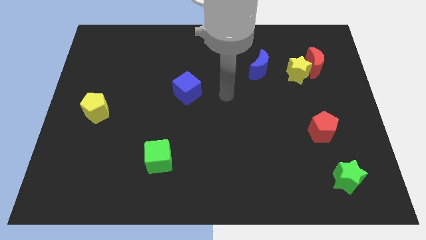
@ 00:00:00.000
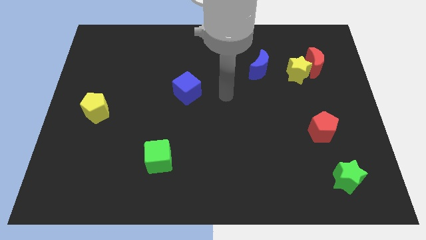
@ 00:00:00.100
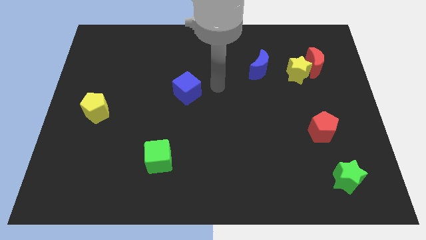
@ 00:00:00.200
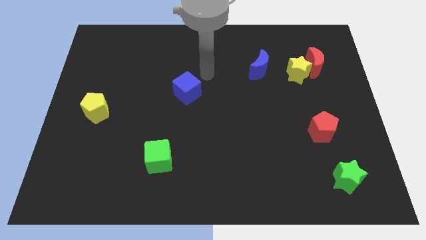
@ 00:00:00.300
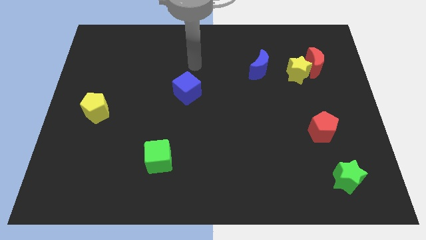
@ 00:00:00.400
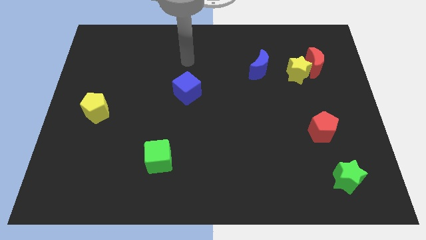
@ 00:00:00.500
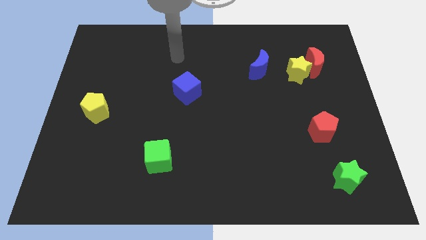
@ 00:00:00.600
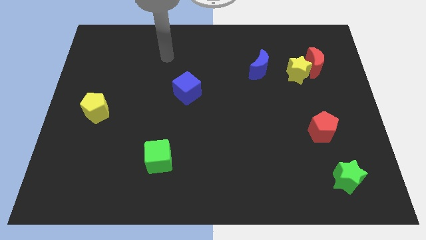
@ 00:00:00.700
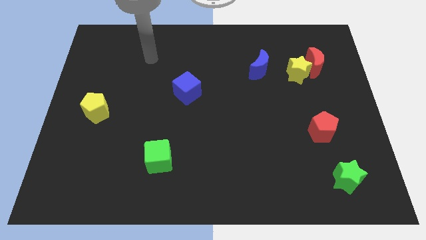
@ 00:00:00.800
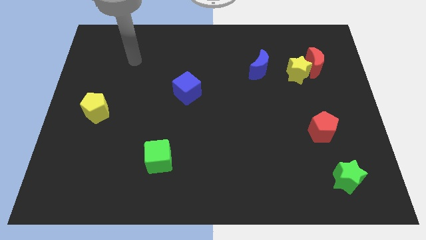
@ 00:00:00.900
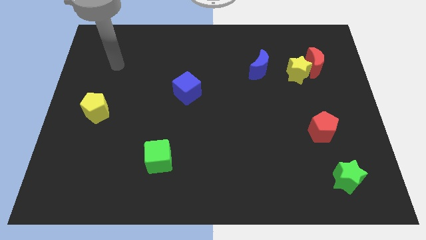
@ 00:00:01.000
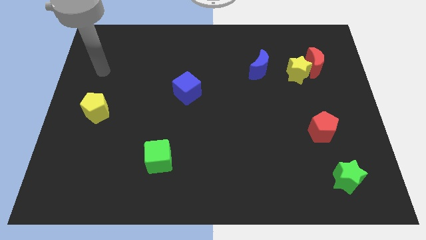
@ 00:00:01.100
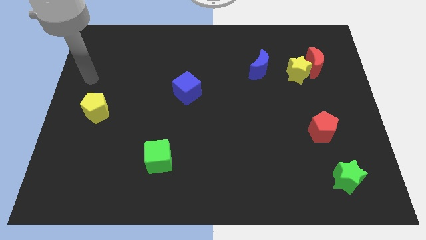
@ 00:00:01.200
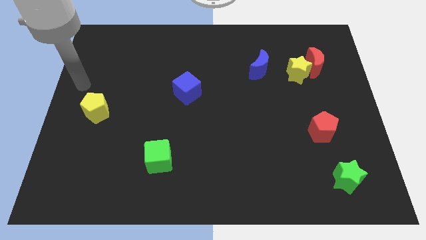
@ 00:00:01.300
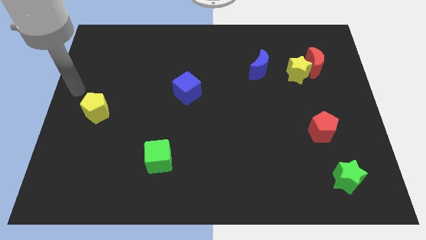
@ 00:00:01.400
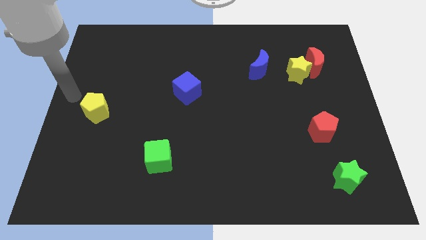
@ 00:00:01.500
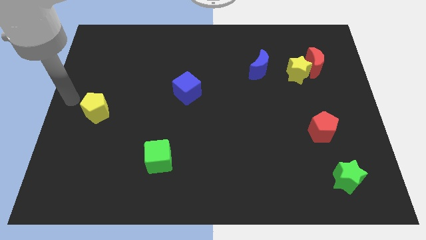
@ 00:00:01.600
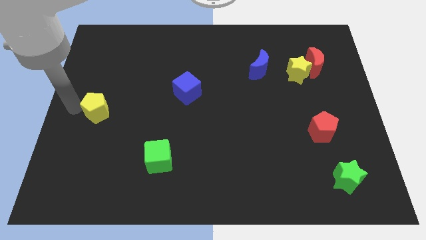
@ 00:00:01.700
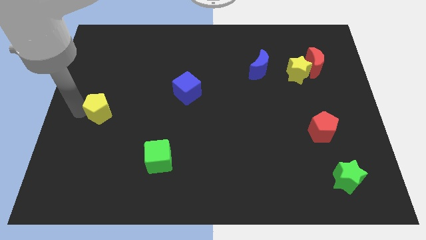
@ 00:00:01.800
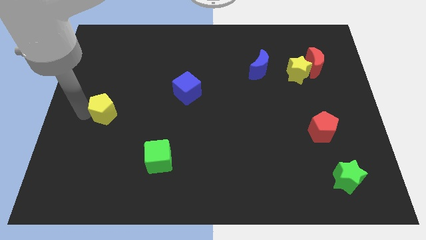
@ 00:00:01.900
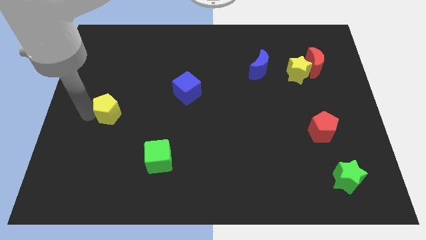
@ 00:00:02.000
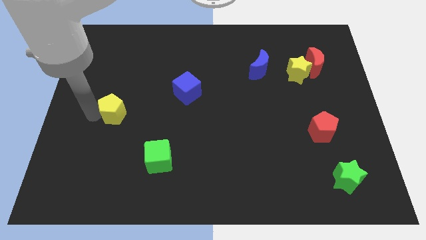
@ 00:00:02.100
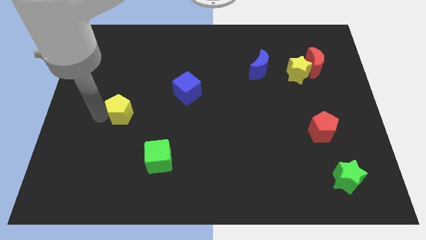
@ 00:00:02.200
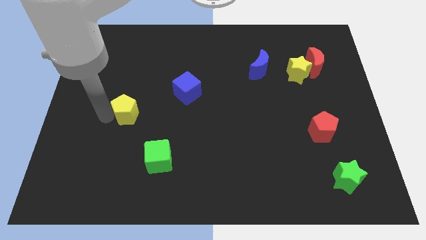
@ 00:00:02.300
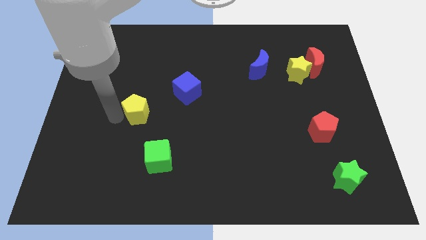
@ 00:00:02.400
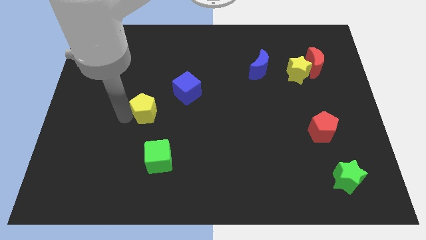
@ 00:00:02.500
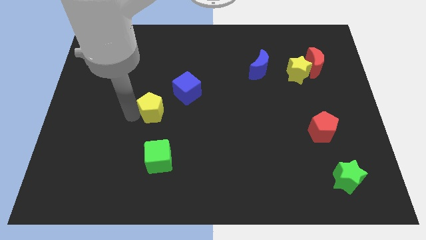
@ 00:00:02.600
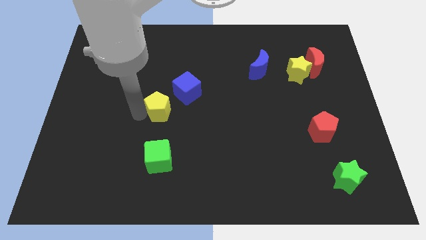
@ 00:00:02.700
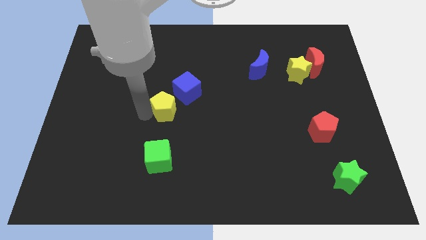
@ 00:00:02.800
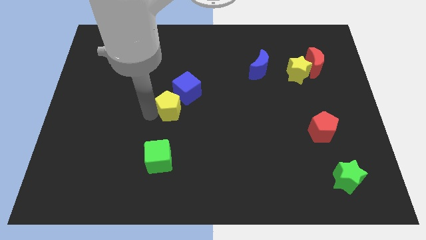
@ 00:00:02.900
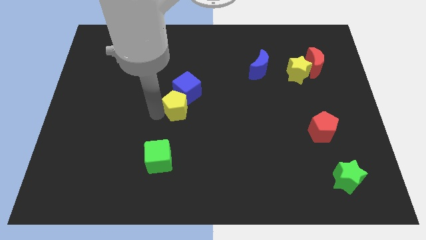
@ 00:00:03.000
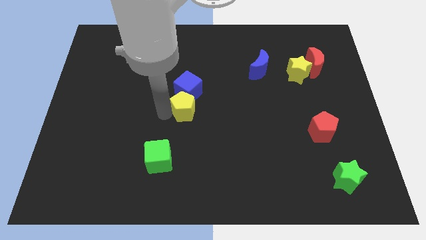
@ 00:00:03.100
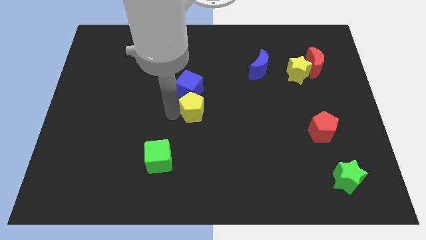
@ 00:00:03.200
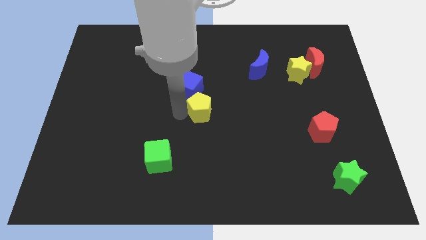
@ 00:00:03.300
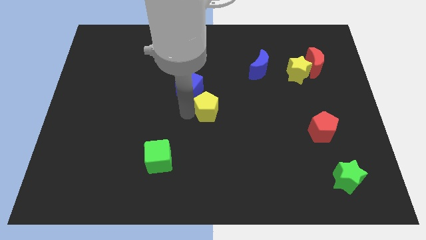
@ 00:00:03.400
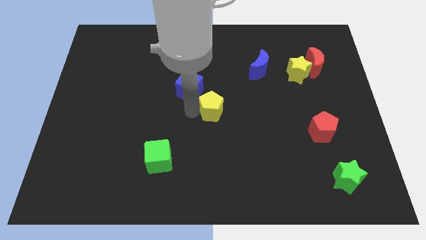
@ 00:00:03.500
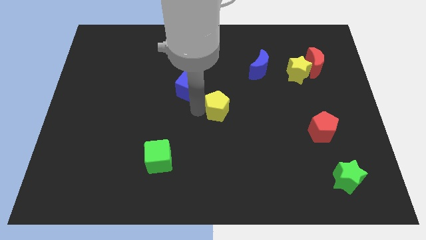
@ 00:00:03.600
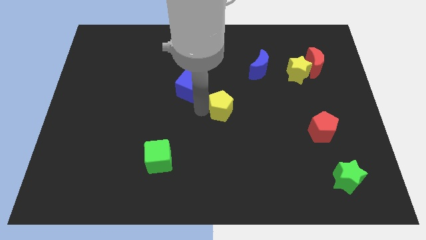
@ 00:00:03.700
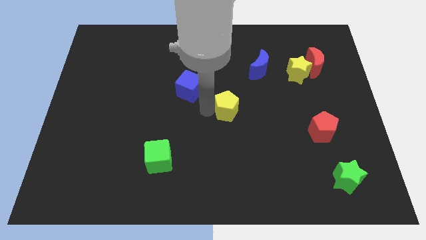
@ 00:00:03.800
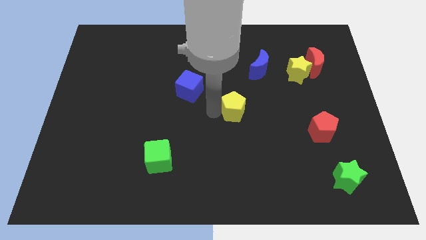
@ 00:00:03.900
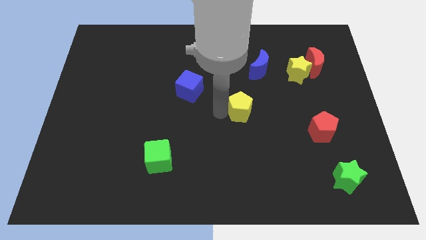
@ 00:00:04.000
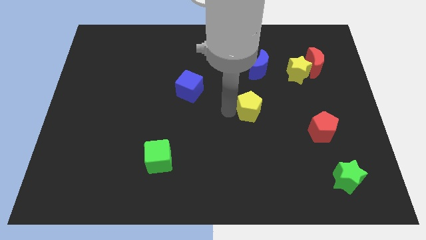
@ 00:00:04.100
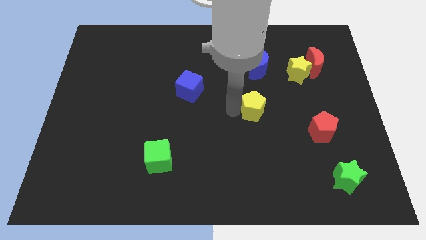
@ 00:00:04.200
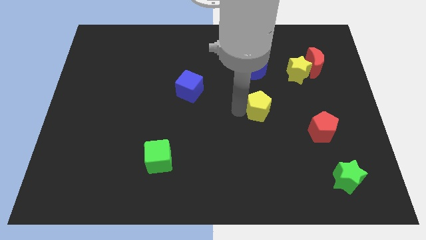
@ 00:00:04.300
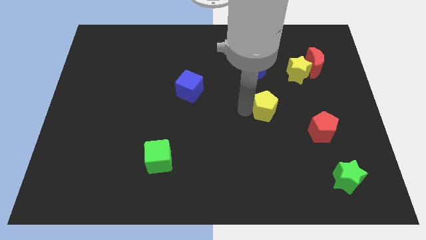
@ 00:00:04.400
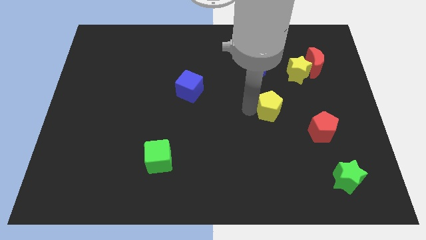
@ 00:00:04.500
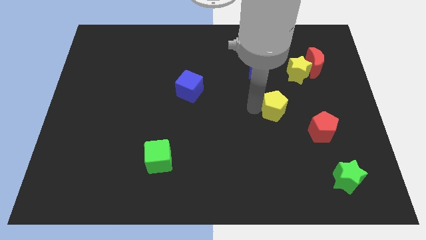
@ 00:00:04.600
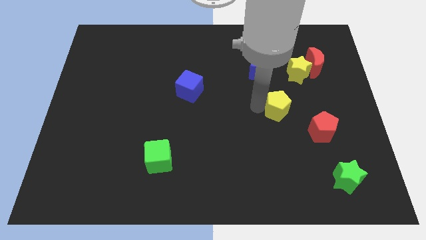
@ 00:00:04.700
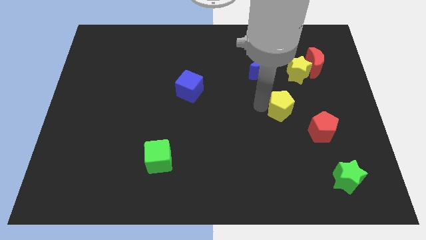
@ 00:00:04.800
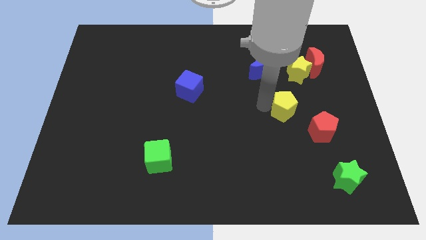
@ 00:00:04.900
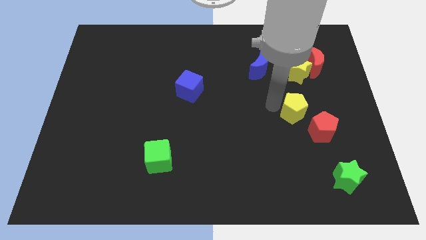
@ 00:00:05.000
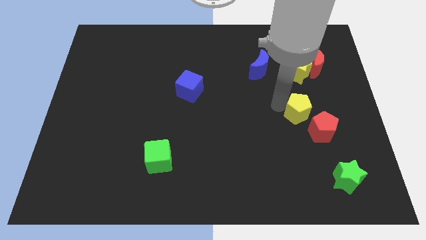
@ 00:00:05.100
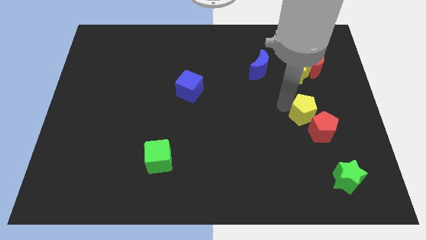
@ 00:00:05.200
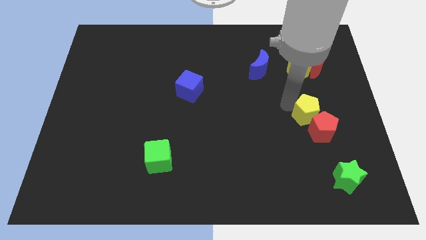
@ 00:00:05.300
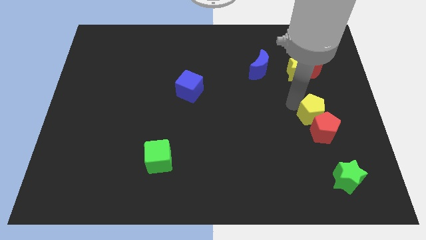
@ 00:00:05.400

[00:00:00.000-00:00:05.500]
push the yellow pentagon close to the red pentagon

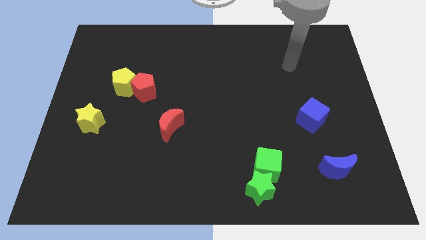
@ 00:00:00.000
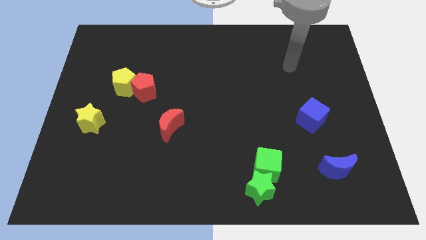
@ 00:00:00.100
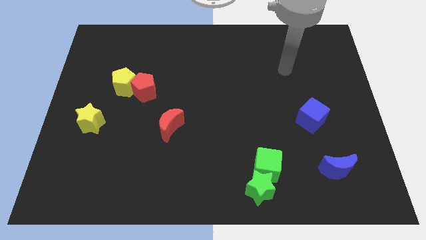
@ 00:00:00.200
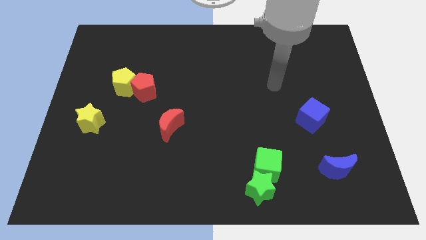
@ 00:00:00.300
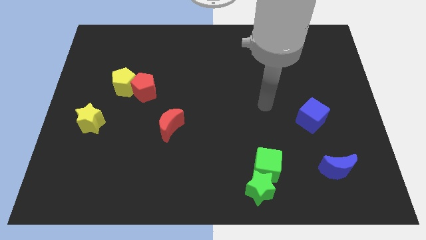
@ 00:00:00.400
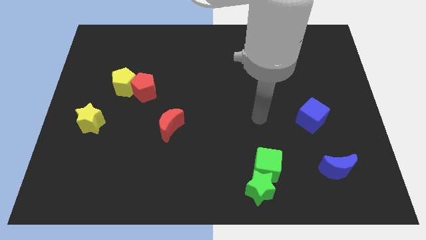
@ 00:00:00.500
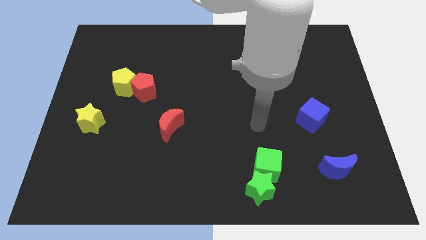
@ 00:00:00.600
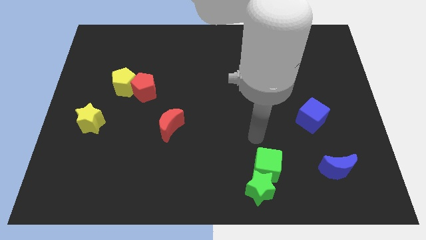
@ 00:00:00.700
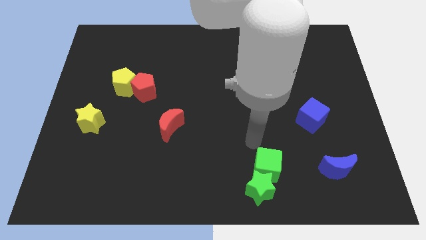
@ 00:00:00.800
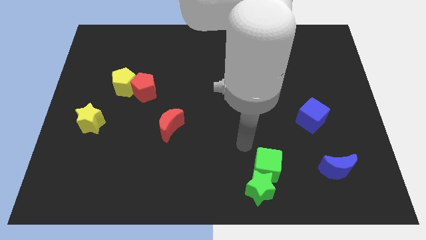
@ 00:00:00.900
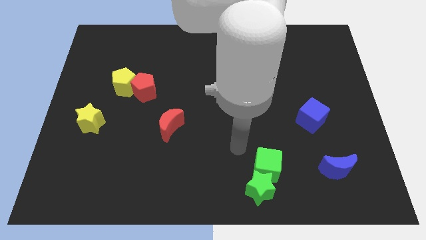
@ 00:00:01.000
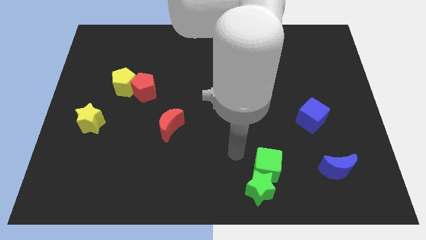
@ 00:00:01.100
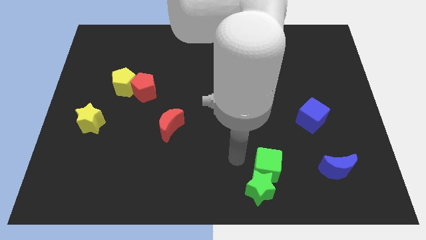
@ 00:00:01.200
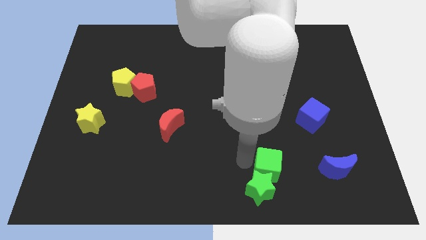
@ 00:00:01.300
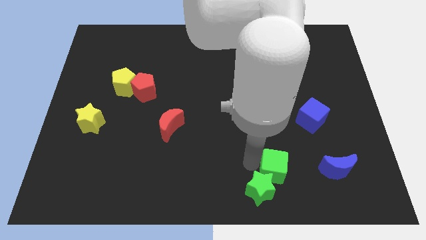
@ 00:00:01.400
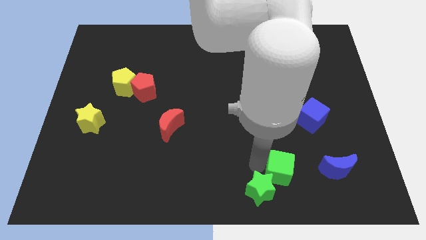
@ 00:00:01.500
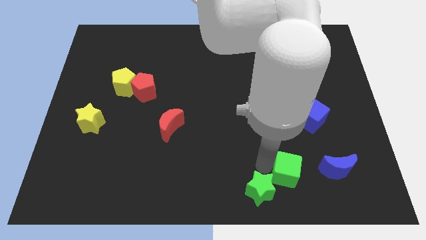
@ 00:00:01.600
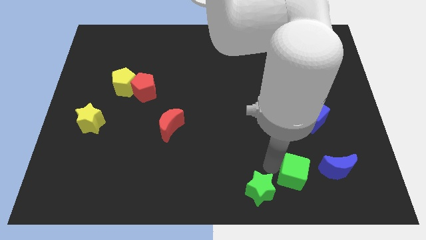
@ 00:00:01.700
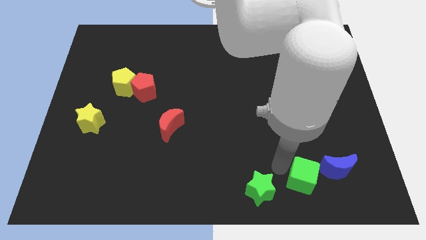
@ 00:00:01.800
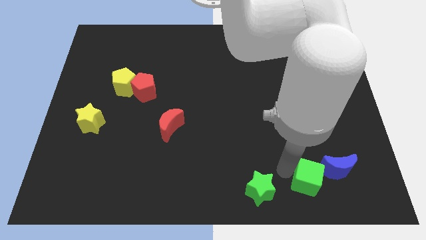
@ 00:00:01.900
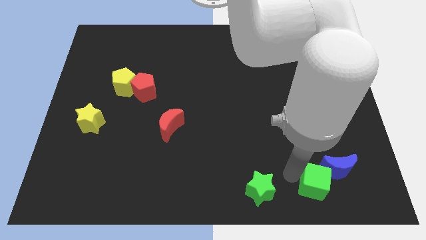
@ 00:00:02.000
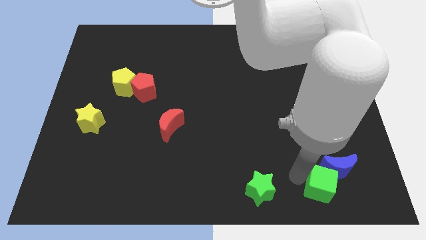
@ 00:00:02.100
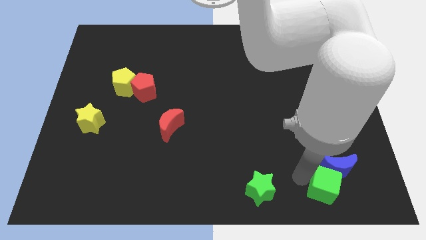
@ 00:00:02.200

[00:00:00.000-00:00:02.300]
push the green cube to the blue moon

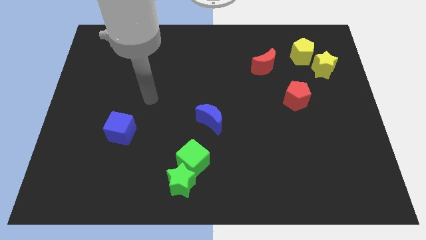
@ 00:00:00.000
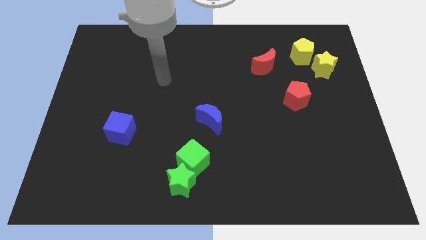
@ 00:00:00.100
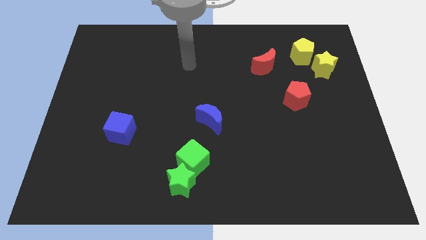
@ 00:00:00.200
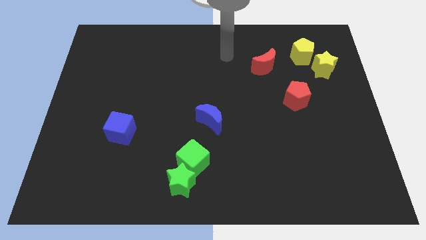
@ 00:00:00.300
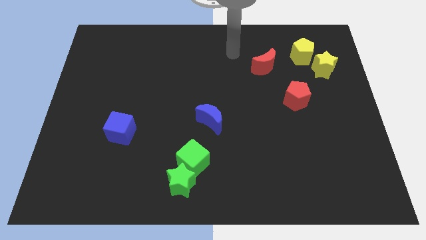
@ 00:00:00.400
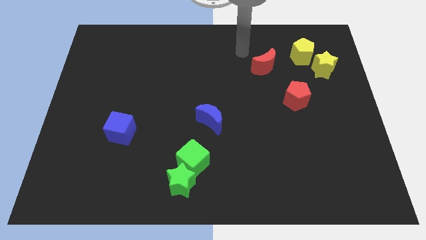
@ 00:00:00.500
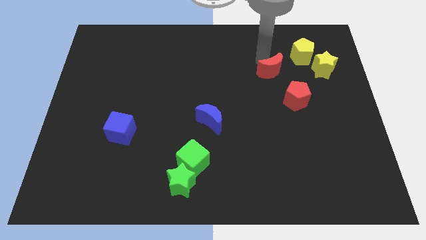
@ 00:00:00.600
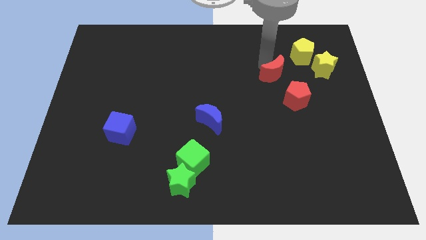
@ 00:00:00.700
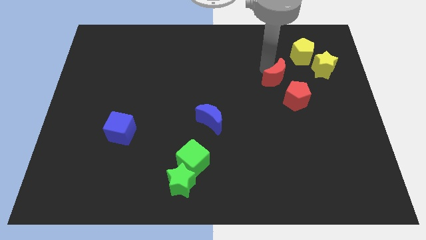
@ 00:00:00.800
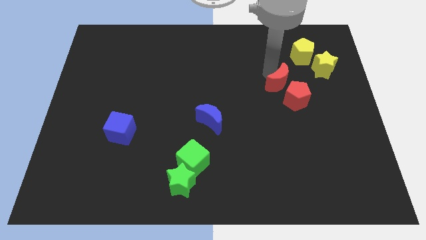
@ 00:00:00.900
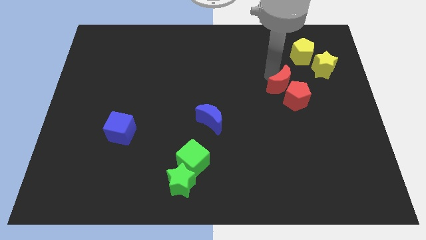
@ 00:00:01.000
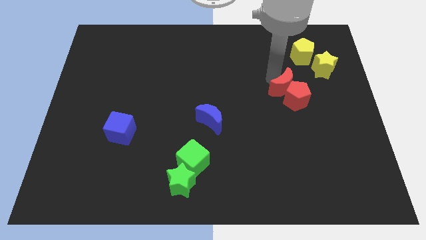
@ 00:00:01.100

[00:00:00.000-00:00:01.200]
put the red moon towards the red pentagon
